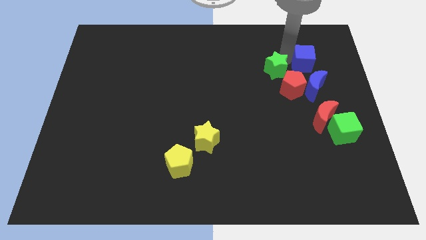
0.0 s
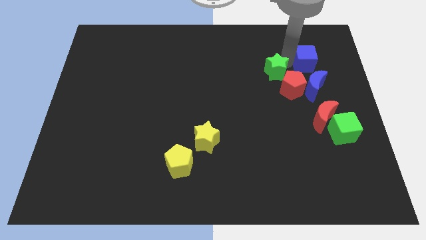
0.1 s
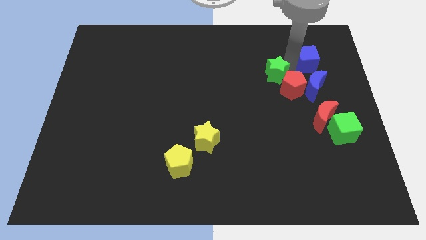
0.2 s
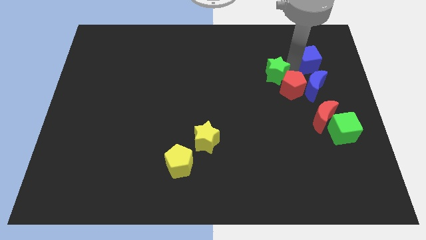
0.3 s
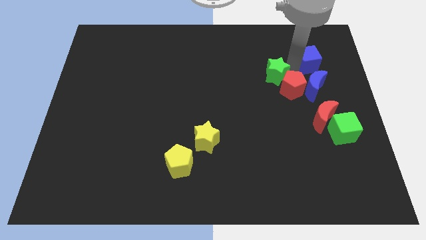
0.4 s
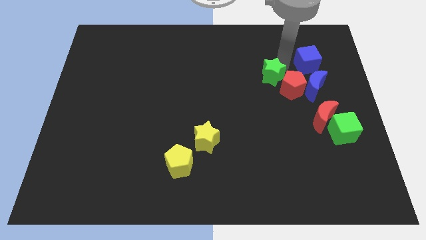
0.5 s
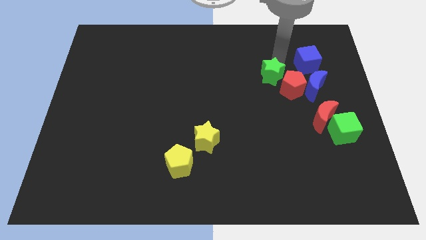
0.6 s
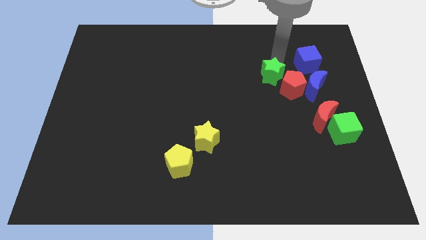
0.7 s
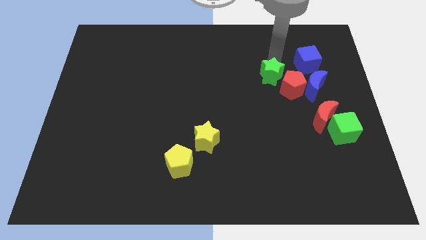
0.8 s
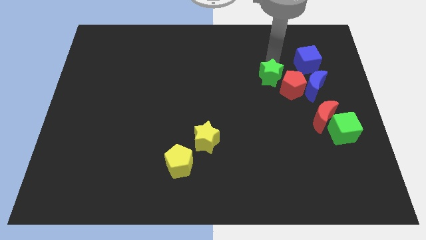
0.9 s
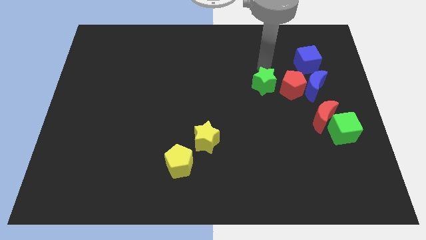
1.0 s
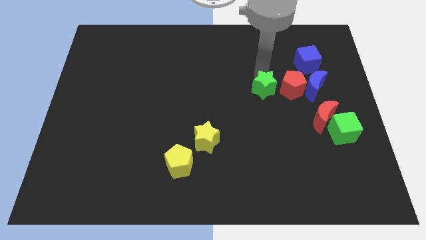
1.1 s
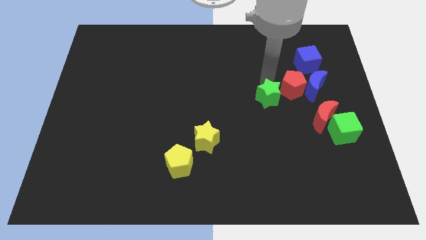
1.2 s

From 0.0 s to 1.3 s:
move the green star to the left of the red pentagon

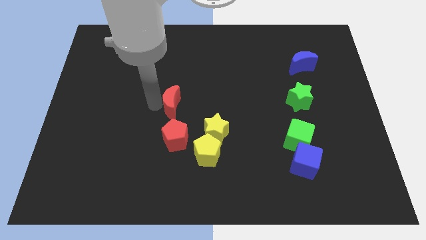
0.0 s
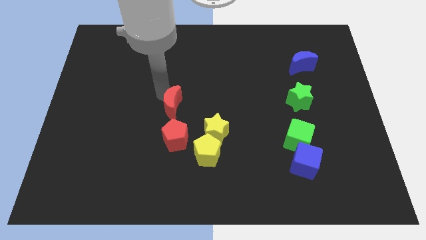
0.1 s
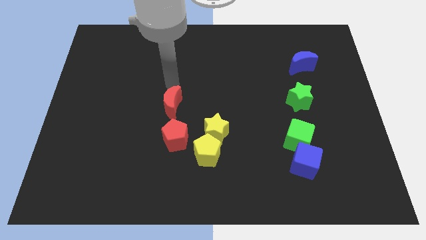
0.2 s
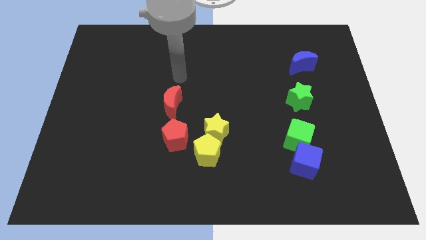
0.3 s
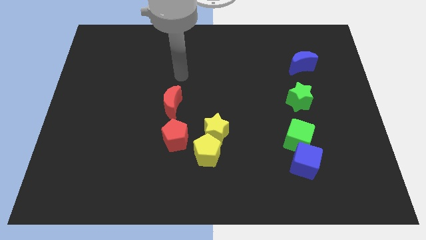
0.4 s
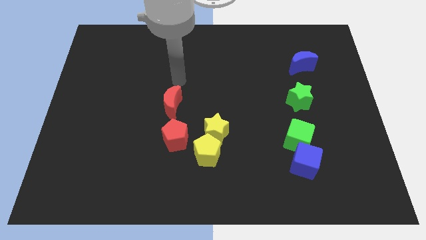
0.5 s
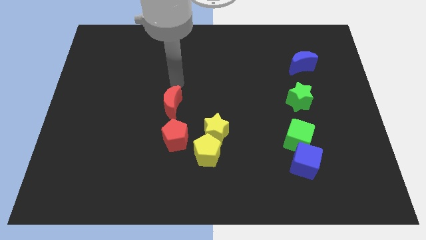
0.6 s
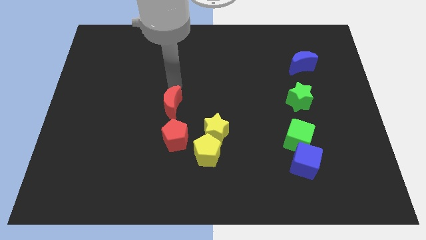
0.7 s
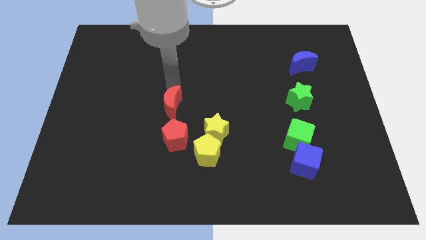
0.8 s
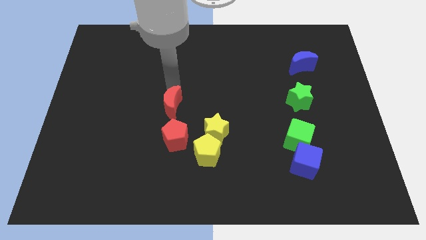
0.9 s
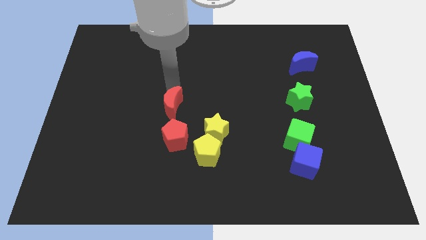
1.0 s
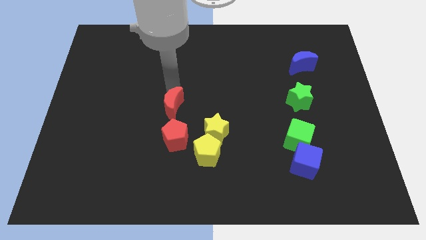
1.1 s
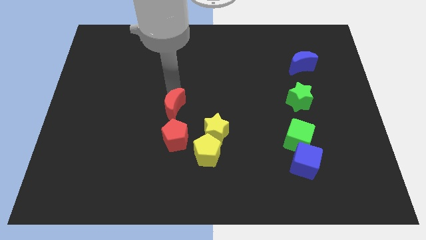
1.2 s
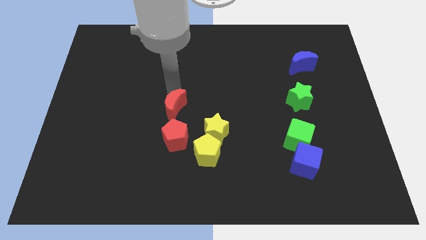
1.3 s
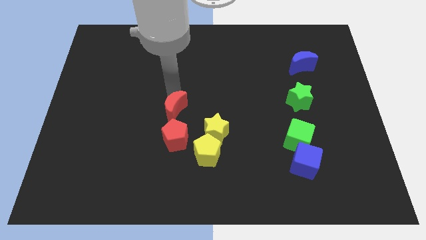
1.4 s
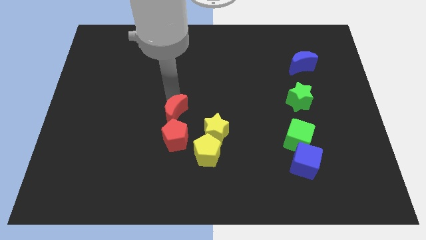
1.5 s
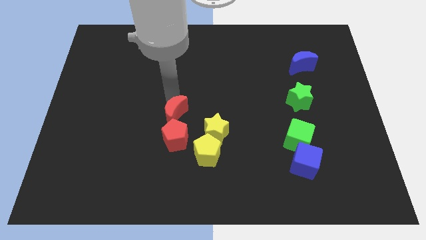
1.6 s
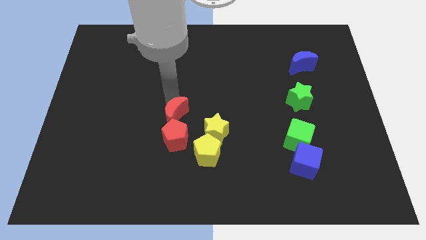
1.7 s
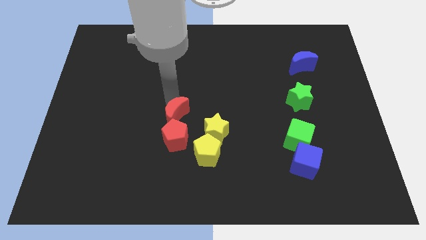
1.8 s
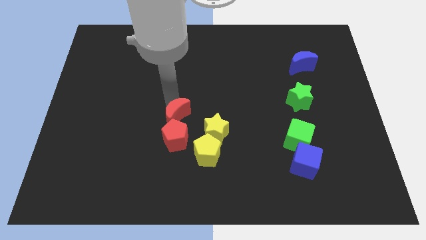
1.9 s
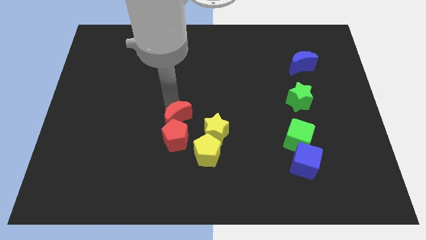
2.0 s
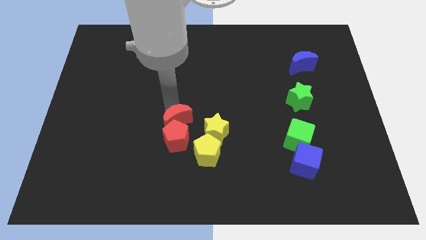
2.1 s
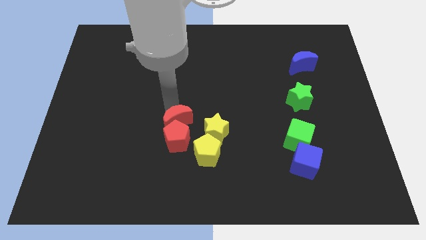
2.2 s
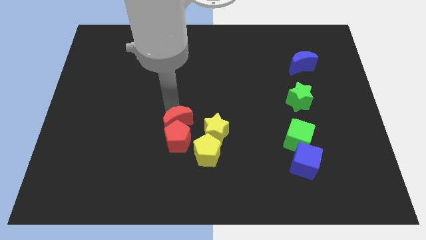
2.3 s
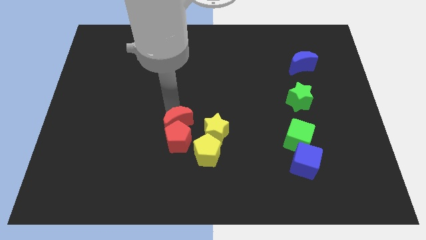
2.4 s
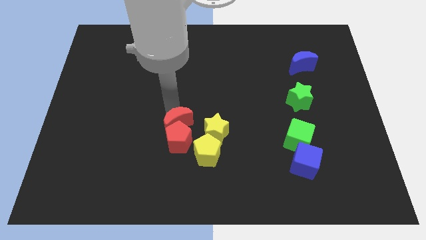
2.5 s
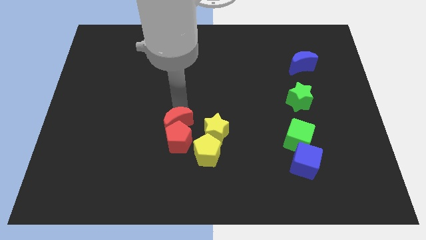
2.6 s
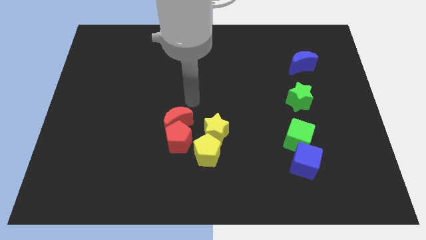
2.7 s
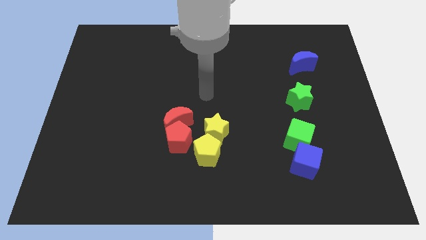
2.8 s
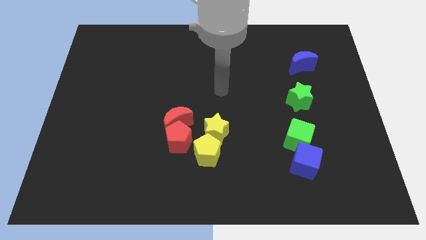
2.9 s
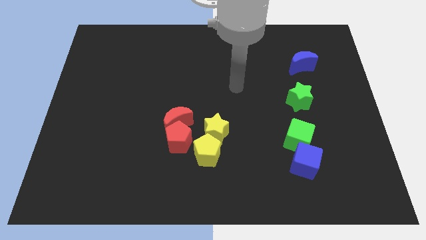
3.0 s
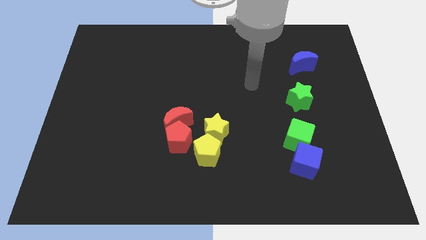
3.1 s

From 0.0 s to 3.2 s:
push the red moon into the red pentagon

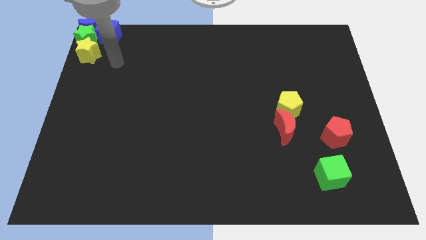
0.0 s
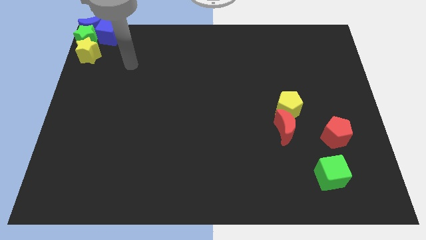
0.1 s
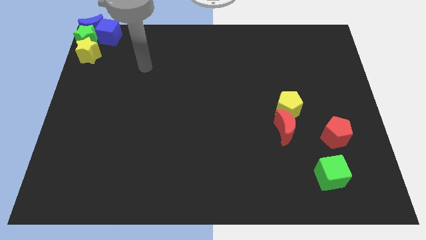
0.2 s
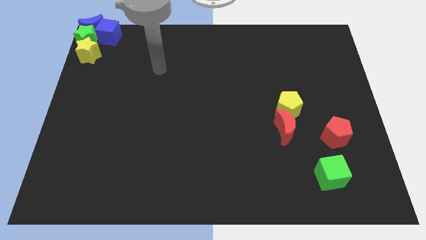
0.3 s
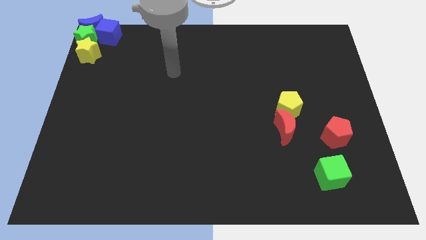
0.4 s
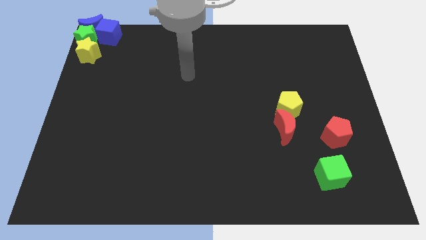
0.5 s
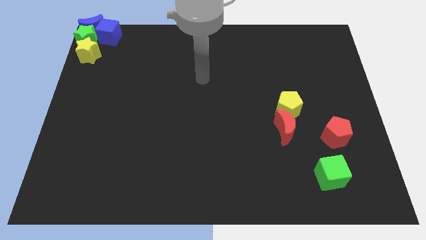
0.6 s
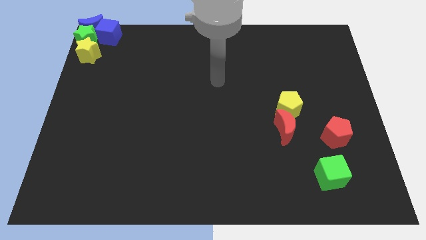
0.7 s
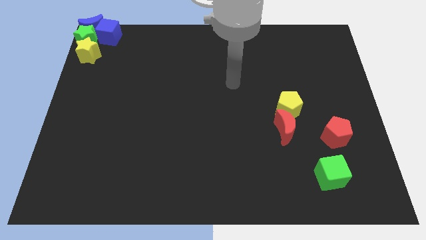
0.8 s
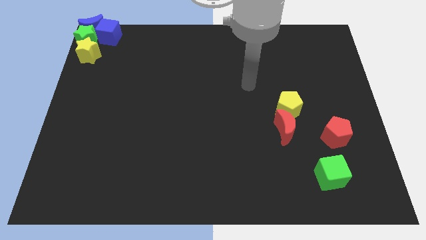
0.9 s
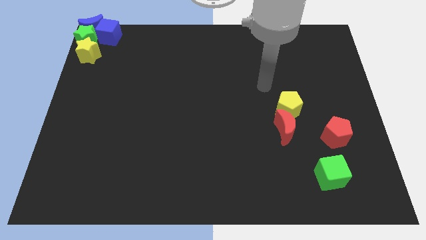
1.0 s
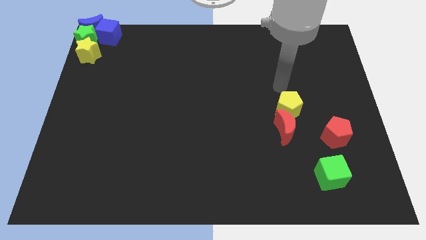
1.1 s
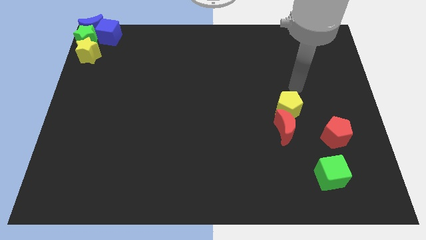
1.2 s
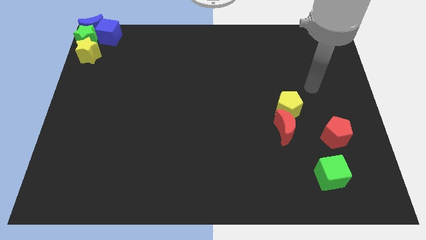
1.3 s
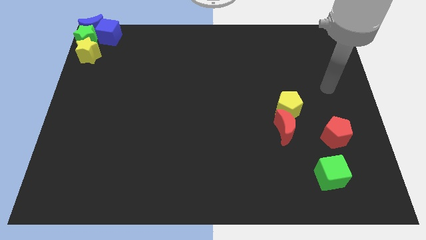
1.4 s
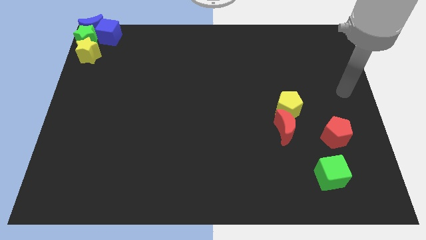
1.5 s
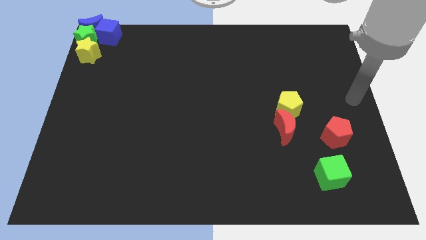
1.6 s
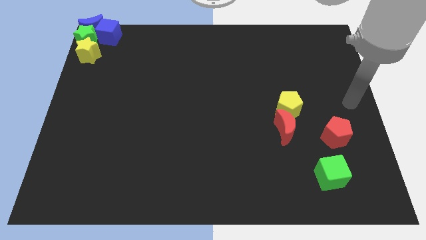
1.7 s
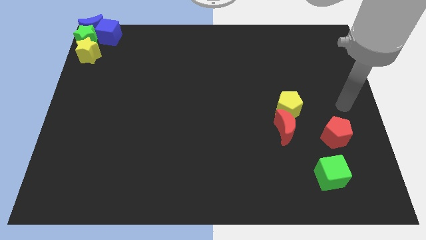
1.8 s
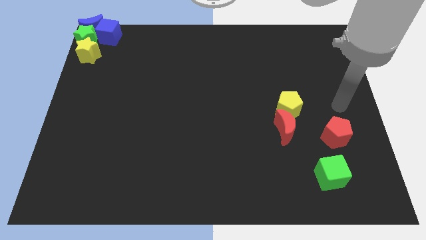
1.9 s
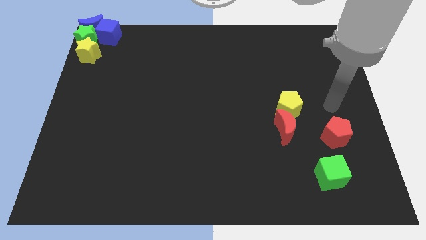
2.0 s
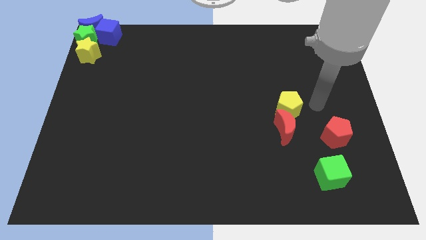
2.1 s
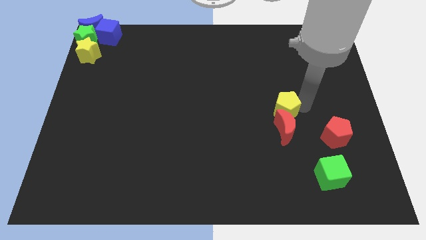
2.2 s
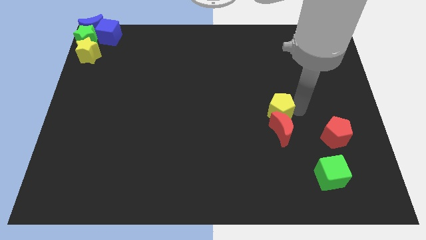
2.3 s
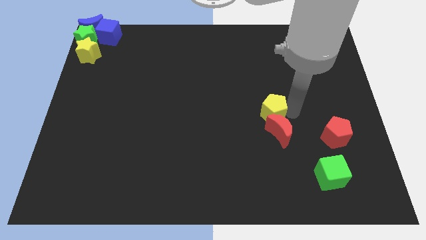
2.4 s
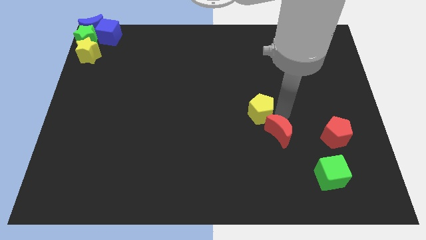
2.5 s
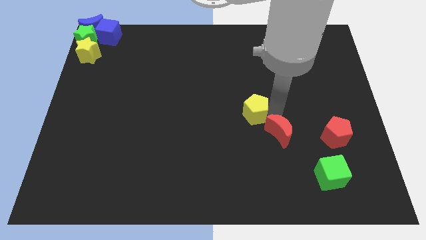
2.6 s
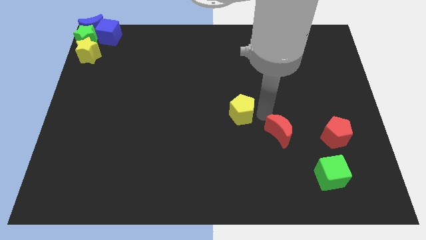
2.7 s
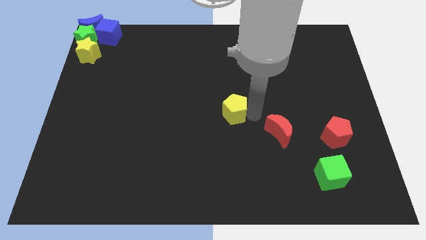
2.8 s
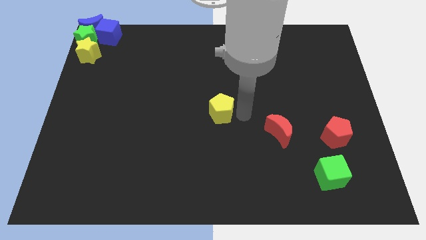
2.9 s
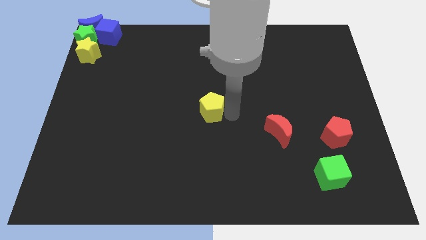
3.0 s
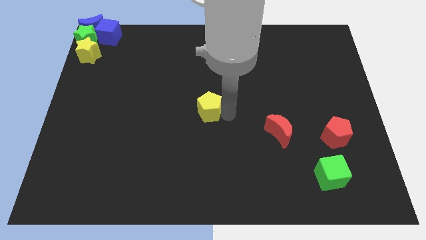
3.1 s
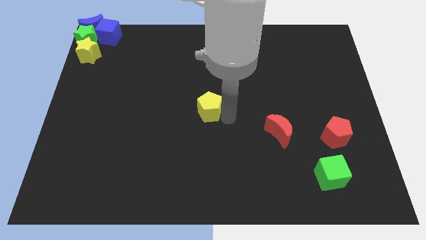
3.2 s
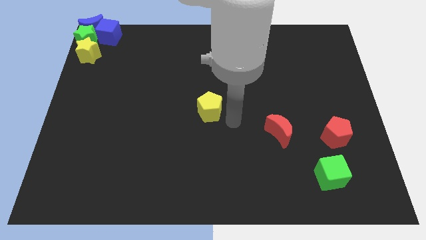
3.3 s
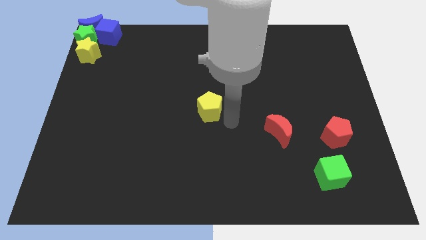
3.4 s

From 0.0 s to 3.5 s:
place the yellow pentagon at the center of the board

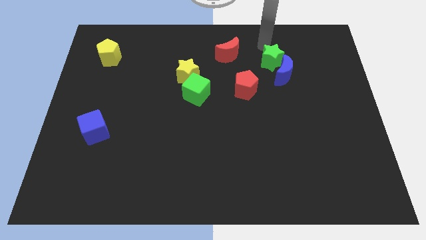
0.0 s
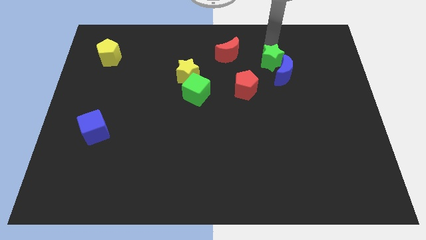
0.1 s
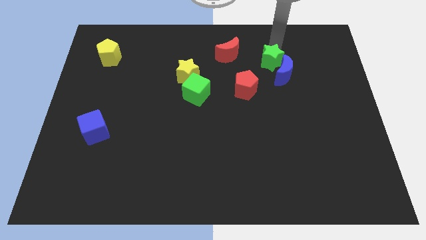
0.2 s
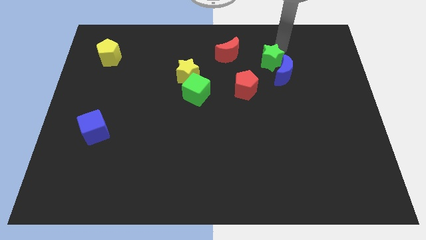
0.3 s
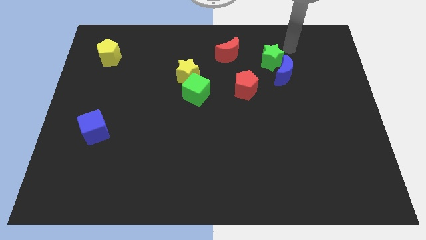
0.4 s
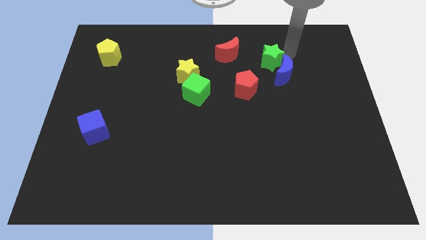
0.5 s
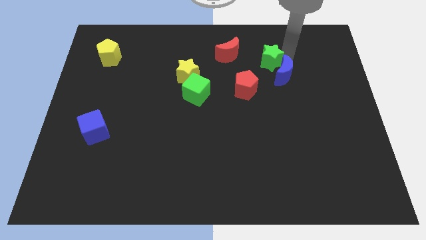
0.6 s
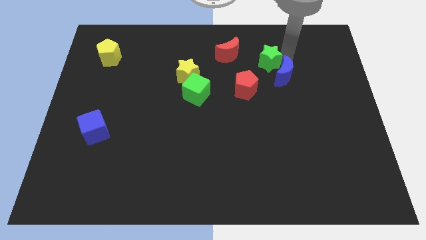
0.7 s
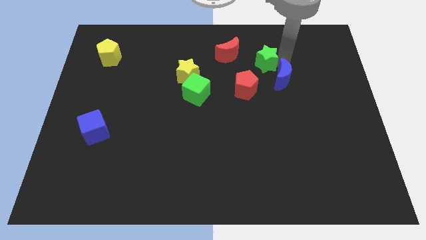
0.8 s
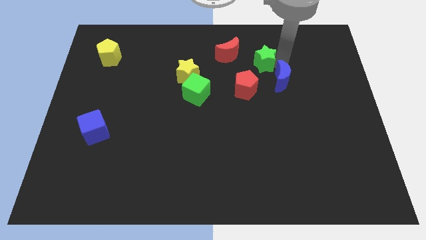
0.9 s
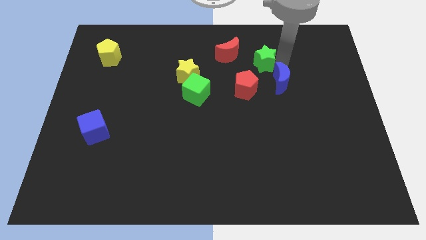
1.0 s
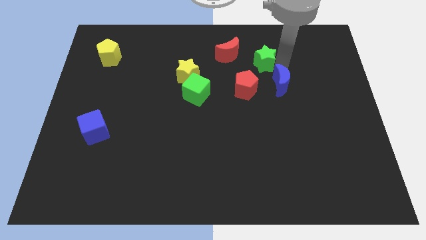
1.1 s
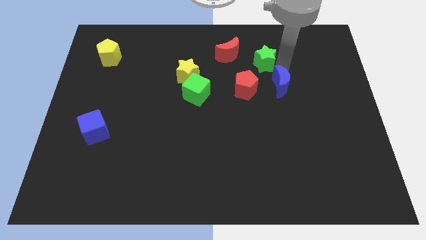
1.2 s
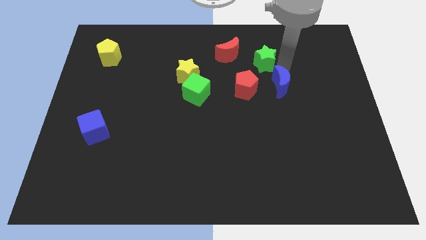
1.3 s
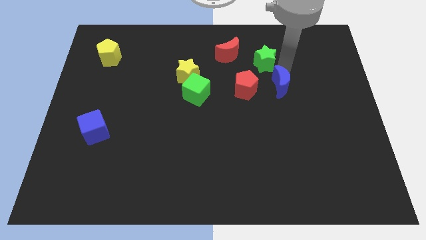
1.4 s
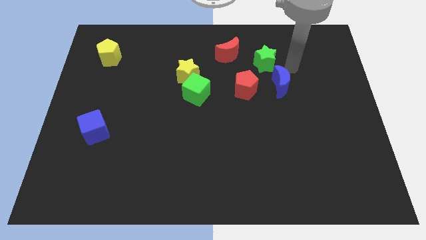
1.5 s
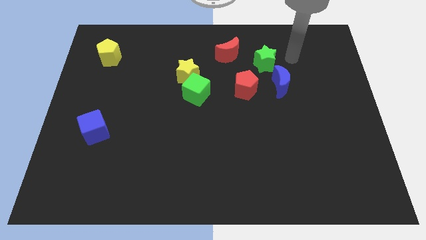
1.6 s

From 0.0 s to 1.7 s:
move the blue moon to the right of the red pentagon
